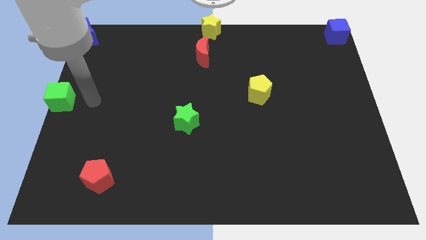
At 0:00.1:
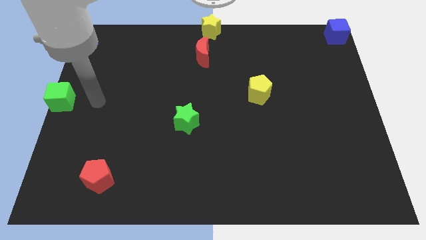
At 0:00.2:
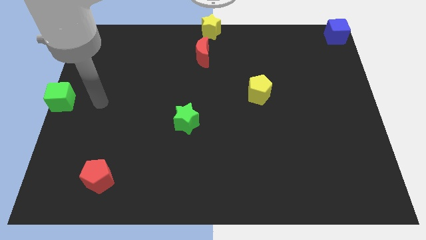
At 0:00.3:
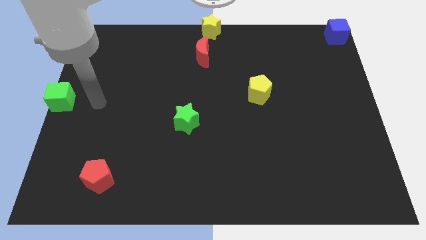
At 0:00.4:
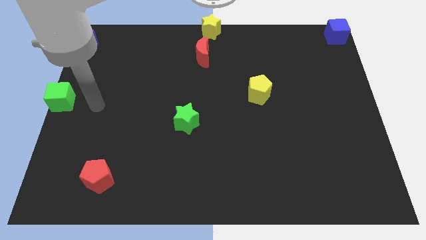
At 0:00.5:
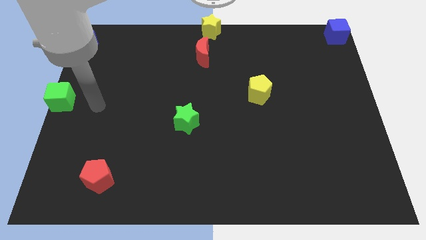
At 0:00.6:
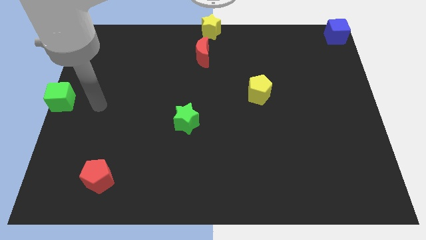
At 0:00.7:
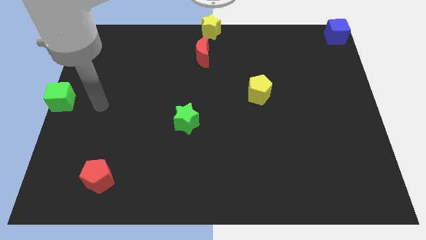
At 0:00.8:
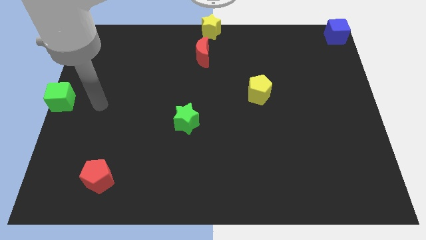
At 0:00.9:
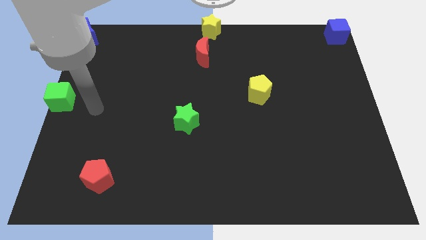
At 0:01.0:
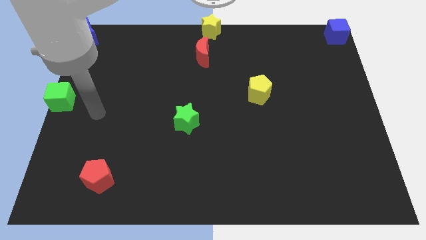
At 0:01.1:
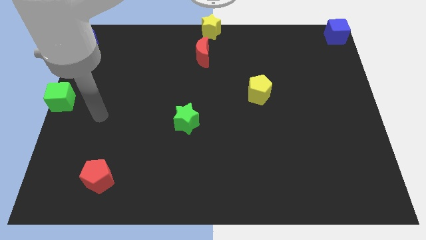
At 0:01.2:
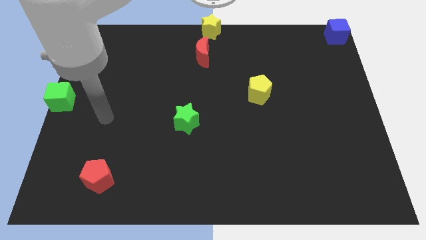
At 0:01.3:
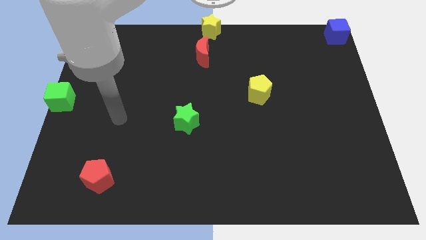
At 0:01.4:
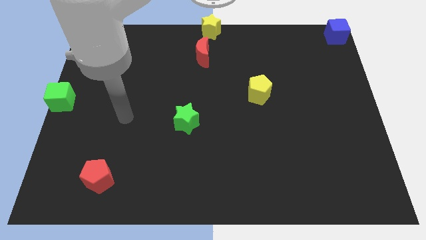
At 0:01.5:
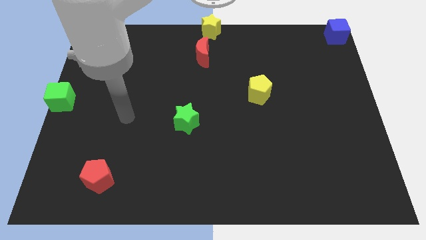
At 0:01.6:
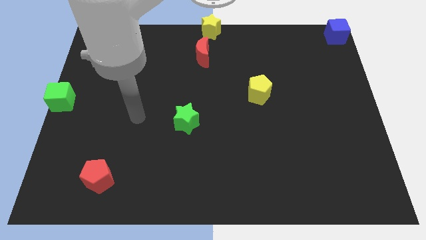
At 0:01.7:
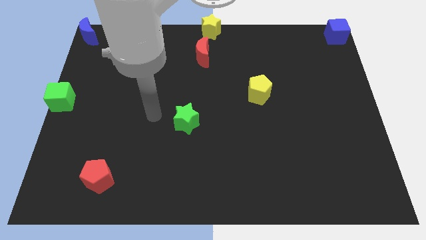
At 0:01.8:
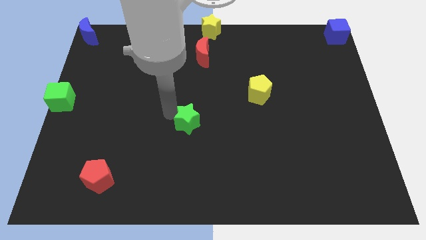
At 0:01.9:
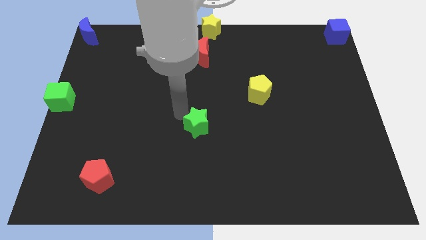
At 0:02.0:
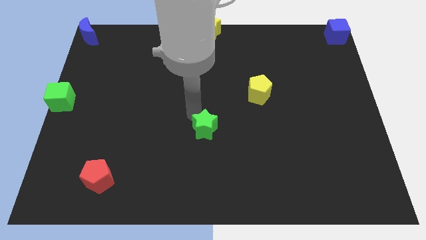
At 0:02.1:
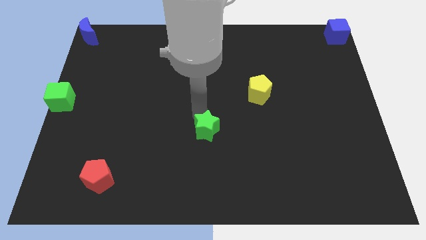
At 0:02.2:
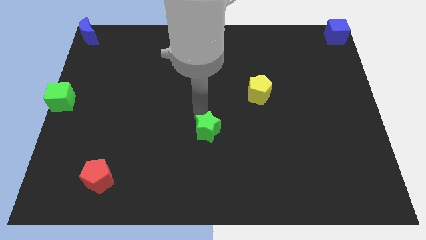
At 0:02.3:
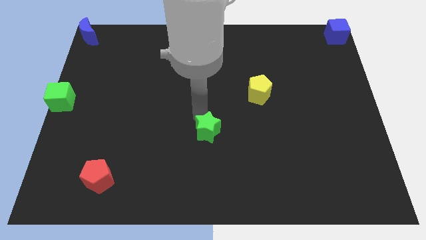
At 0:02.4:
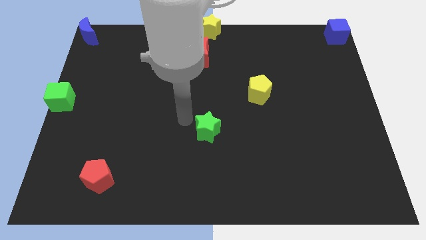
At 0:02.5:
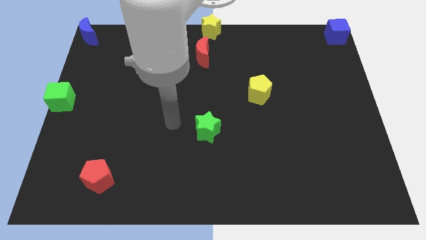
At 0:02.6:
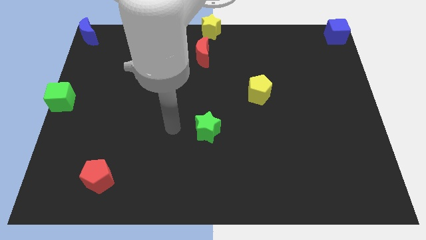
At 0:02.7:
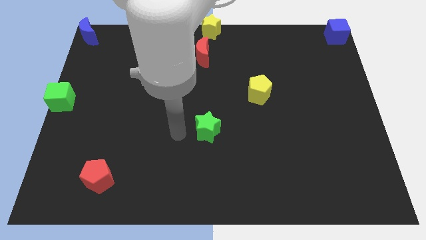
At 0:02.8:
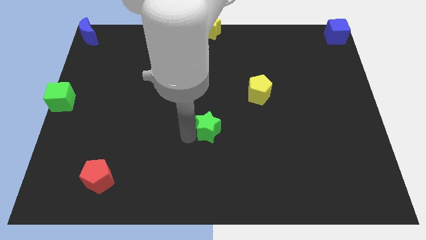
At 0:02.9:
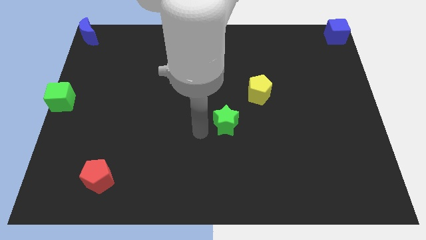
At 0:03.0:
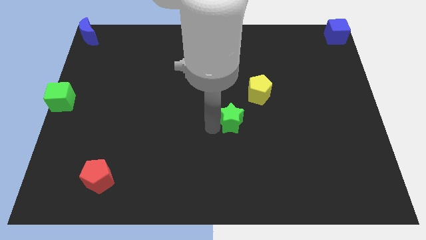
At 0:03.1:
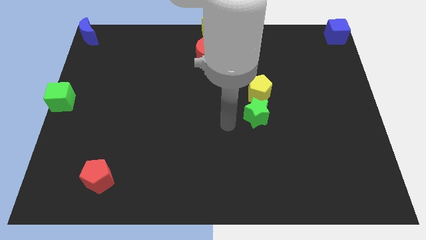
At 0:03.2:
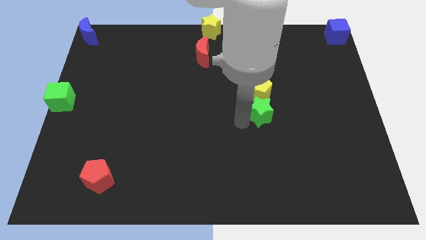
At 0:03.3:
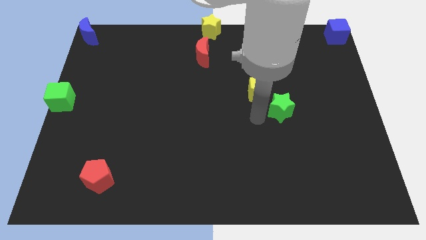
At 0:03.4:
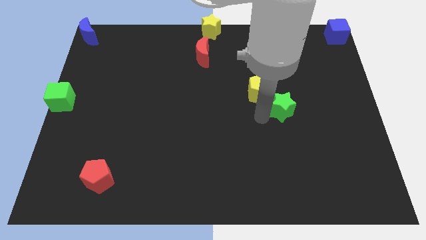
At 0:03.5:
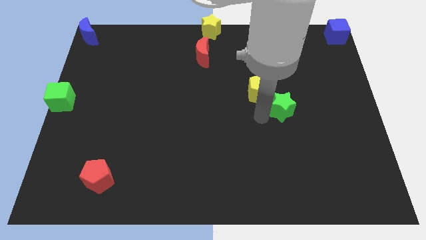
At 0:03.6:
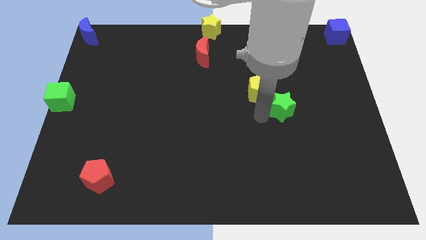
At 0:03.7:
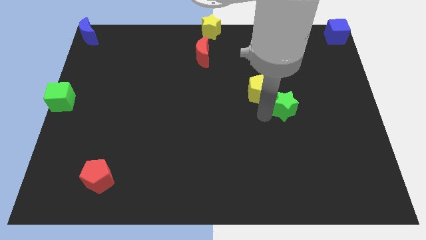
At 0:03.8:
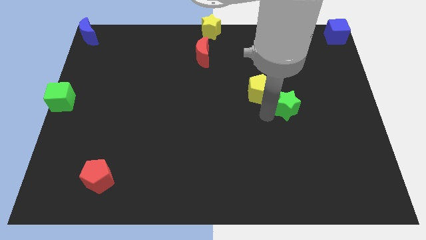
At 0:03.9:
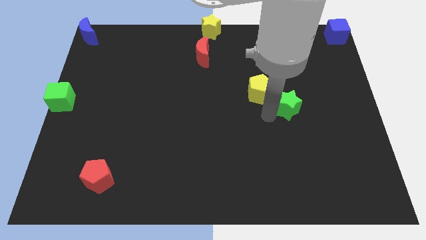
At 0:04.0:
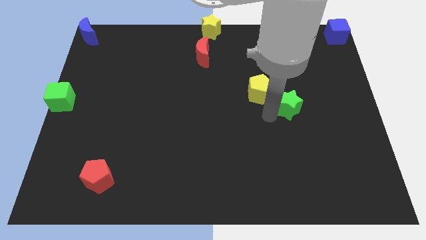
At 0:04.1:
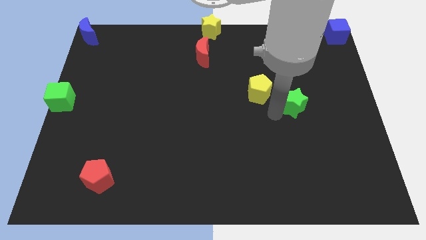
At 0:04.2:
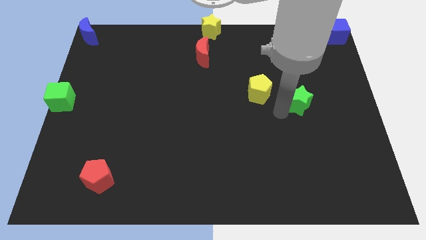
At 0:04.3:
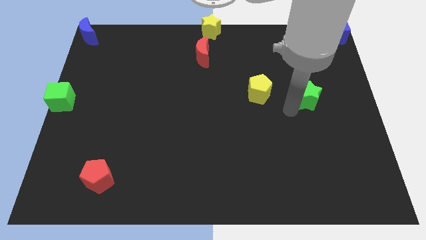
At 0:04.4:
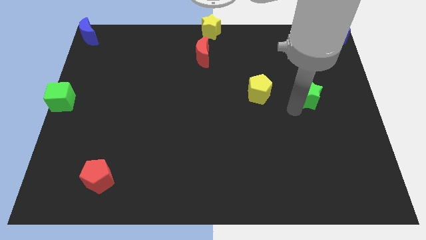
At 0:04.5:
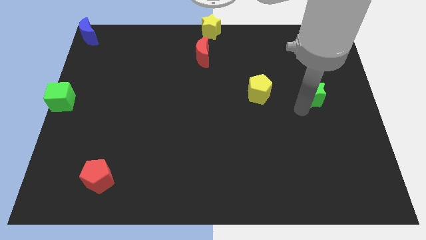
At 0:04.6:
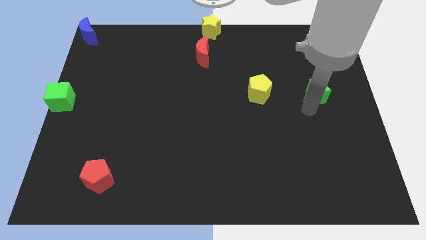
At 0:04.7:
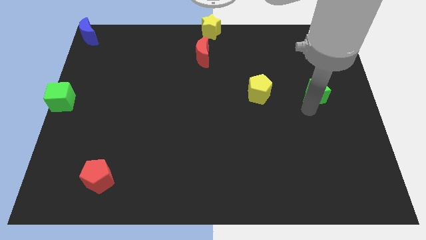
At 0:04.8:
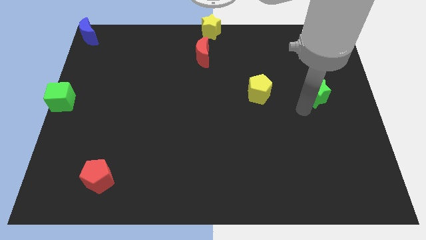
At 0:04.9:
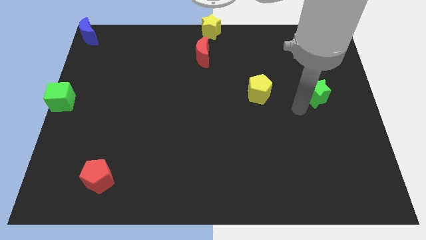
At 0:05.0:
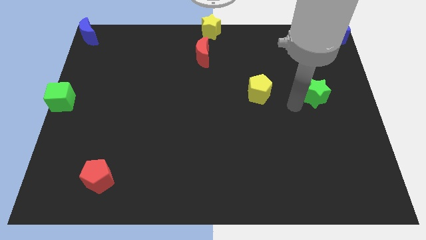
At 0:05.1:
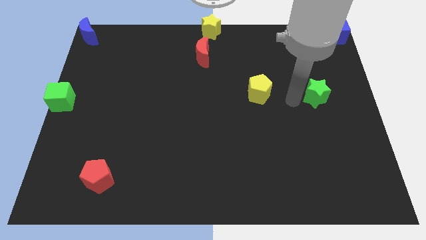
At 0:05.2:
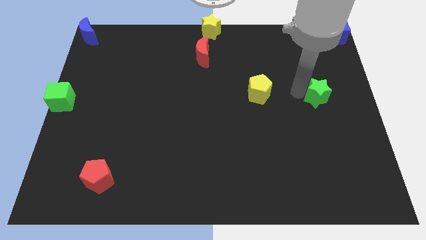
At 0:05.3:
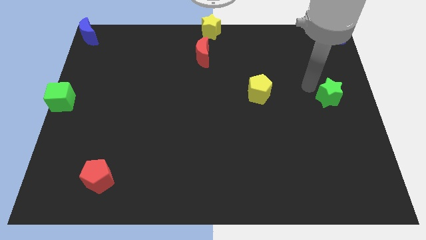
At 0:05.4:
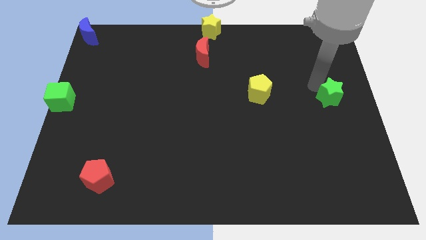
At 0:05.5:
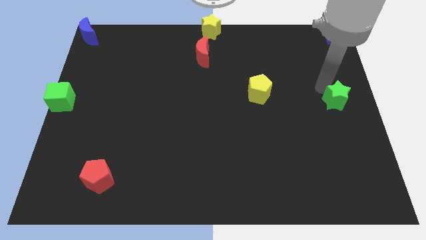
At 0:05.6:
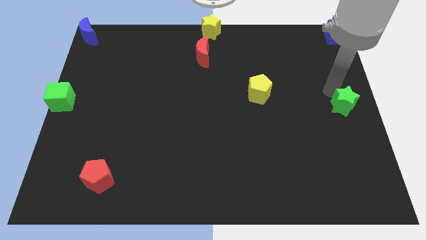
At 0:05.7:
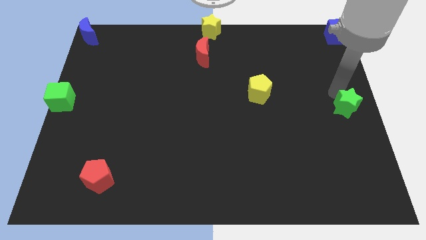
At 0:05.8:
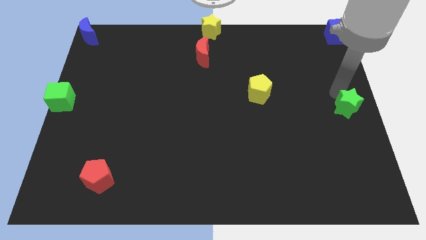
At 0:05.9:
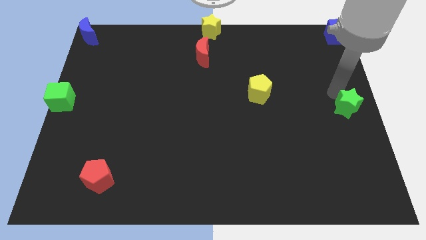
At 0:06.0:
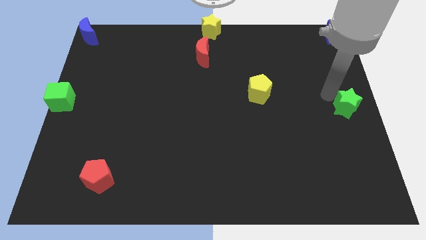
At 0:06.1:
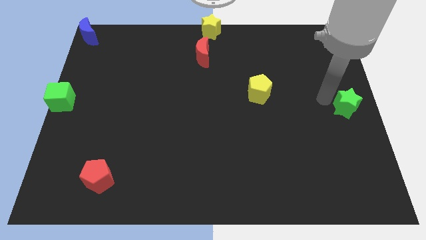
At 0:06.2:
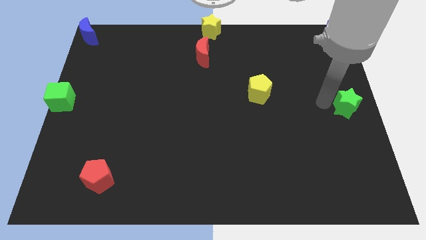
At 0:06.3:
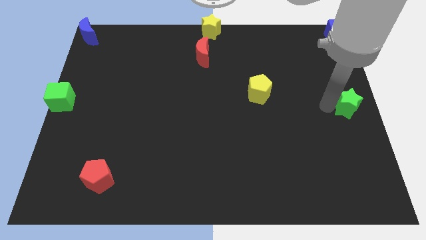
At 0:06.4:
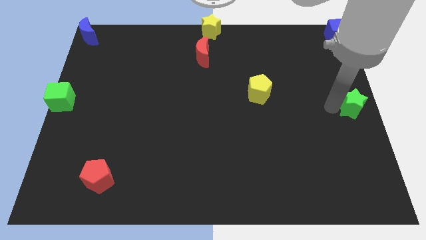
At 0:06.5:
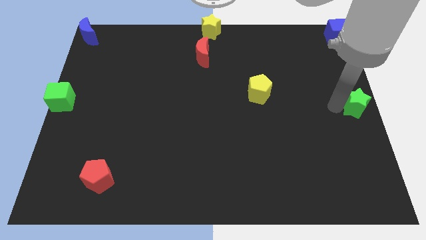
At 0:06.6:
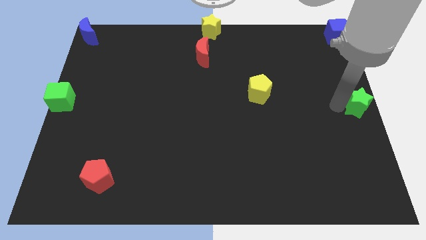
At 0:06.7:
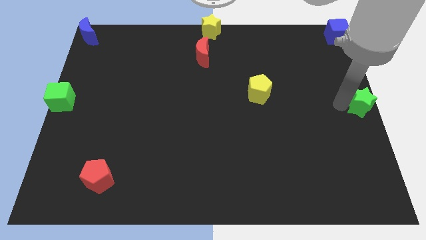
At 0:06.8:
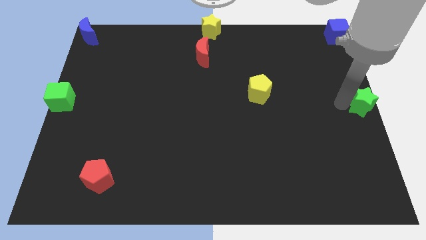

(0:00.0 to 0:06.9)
place the green star at the right side center of the board

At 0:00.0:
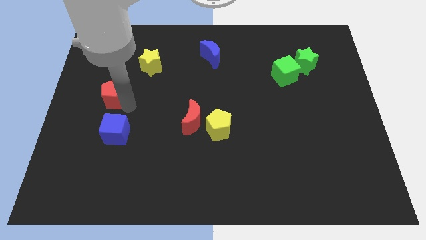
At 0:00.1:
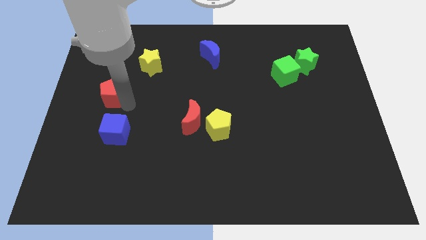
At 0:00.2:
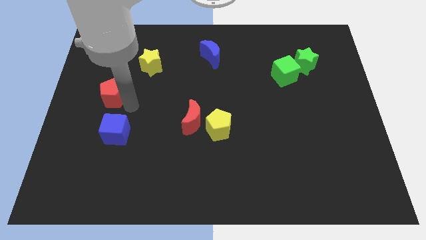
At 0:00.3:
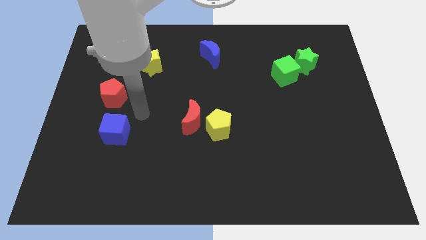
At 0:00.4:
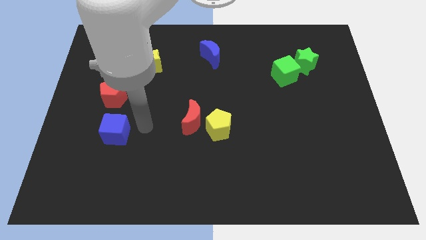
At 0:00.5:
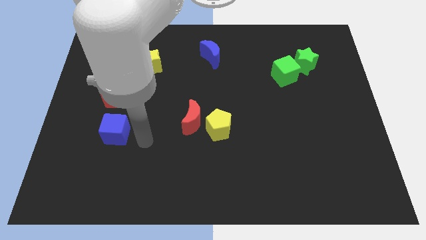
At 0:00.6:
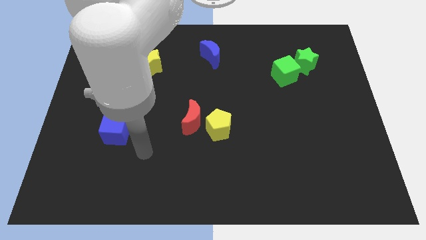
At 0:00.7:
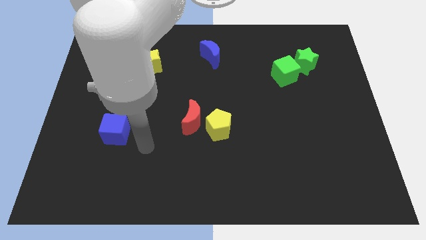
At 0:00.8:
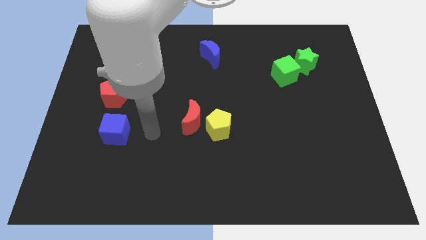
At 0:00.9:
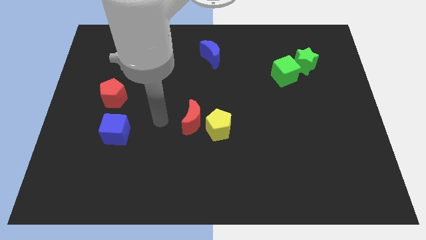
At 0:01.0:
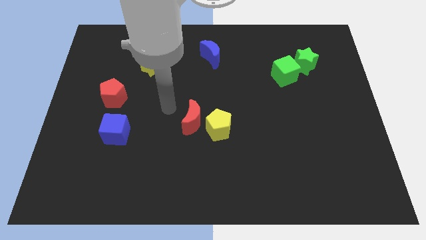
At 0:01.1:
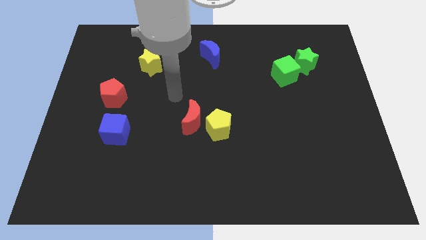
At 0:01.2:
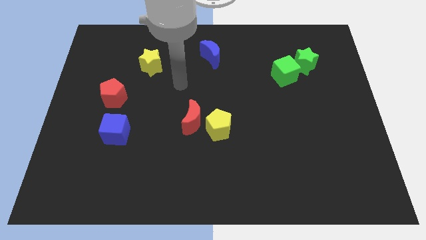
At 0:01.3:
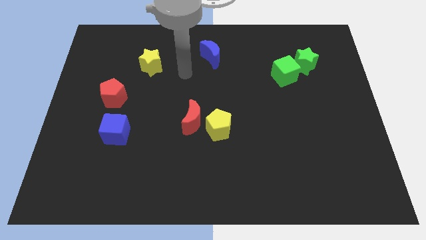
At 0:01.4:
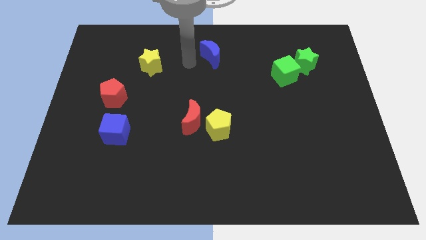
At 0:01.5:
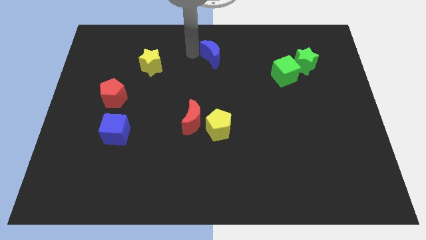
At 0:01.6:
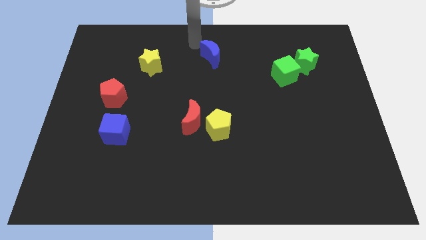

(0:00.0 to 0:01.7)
move your arm away from the red pentagon

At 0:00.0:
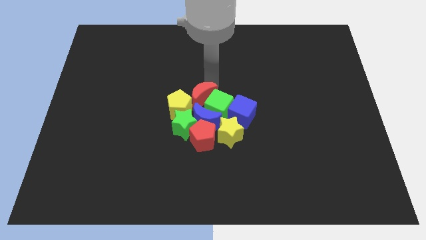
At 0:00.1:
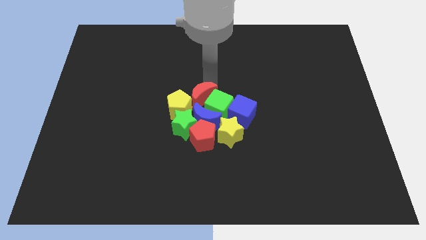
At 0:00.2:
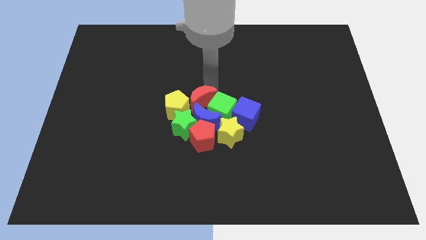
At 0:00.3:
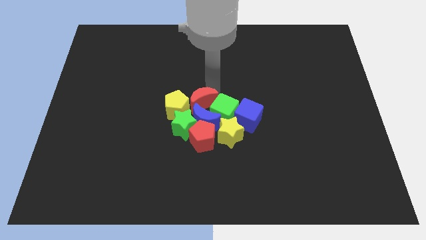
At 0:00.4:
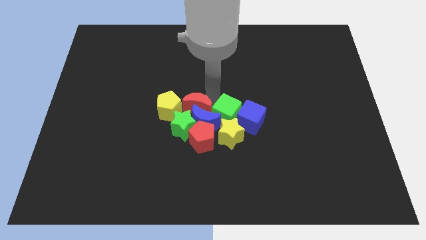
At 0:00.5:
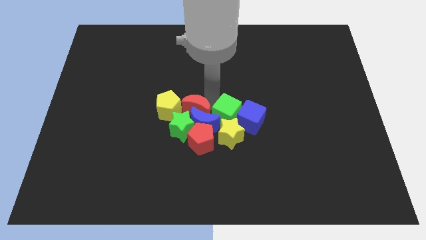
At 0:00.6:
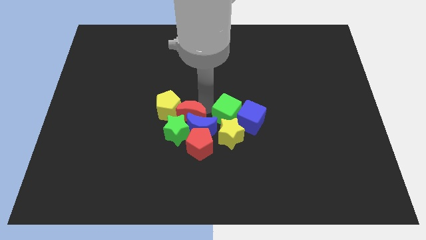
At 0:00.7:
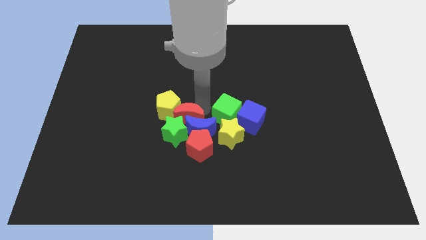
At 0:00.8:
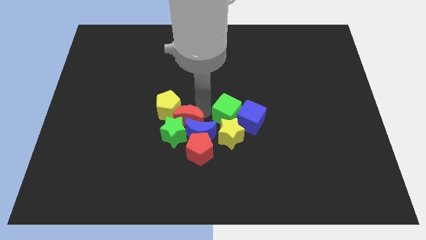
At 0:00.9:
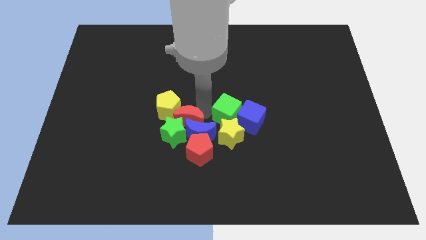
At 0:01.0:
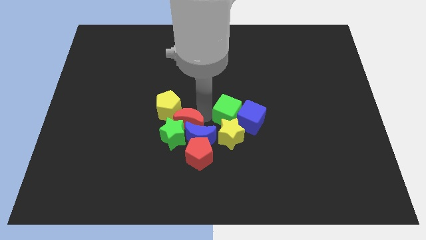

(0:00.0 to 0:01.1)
push the red crescent into the blue crescent
